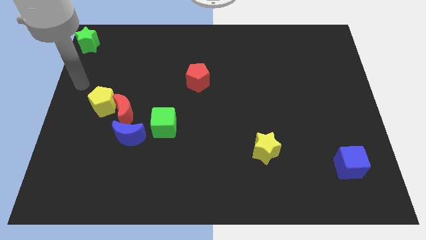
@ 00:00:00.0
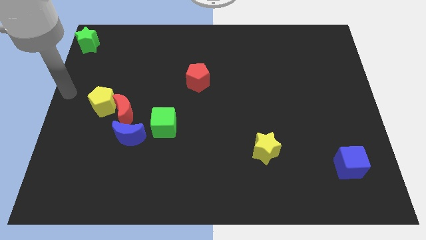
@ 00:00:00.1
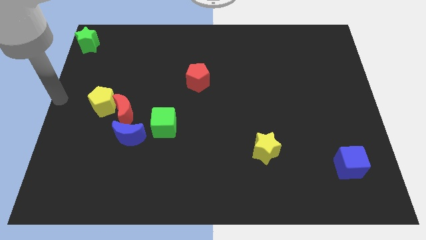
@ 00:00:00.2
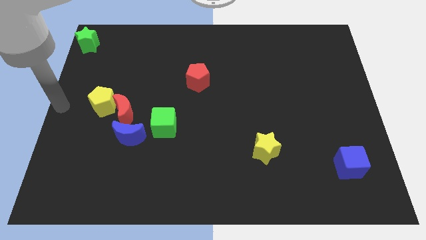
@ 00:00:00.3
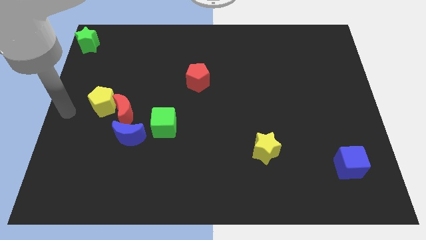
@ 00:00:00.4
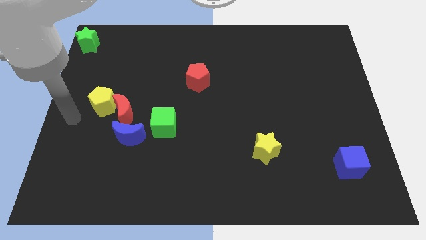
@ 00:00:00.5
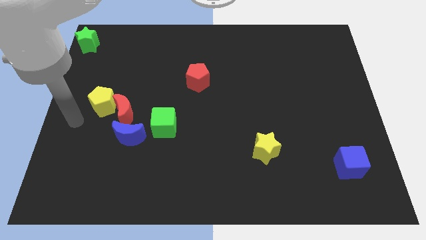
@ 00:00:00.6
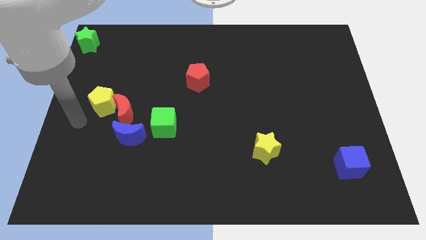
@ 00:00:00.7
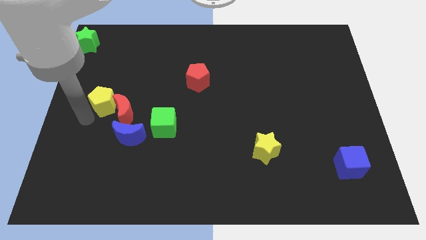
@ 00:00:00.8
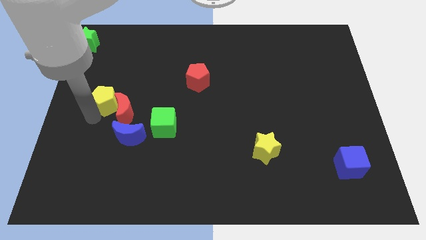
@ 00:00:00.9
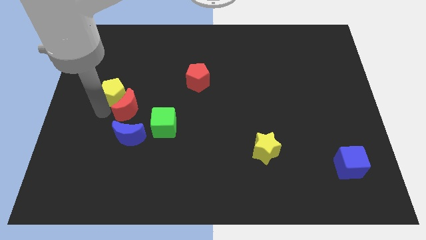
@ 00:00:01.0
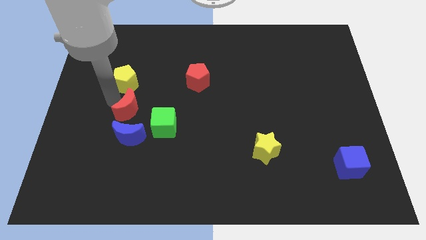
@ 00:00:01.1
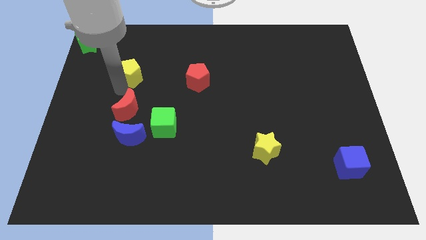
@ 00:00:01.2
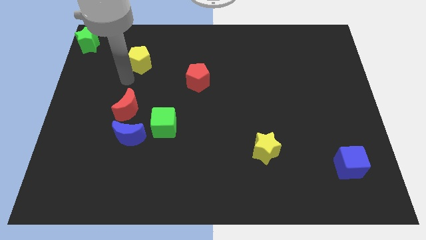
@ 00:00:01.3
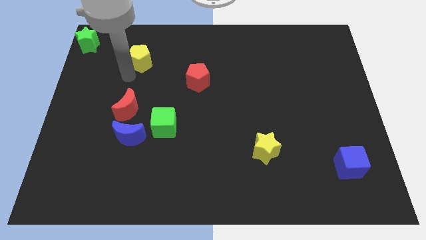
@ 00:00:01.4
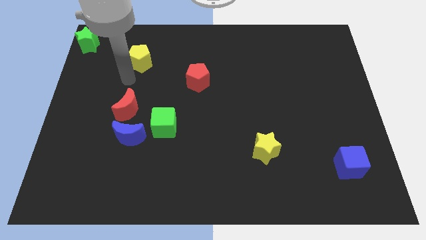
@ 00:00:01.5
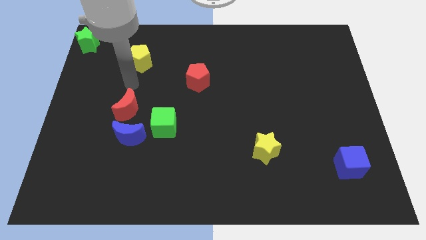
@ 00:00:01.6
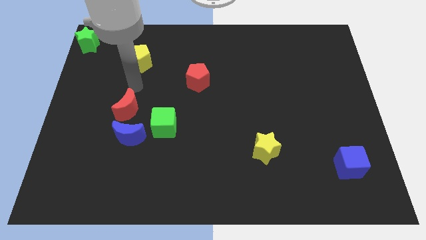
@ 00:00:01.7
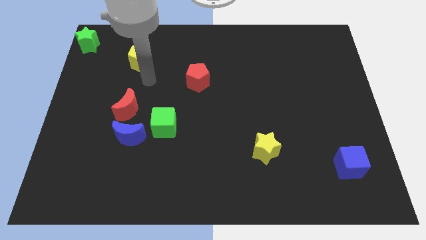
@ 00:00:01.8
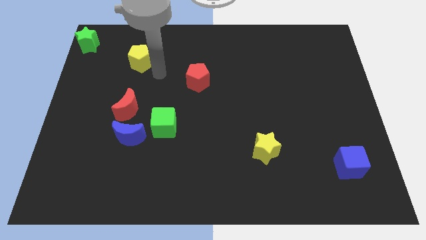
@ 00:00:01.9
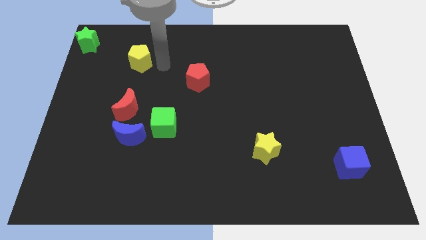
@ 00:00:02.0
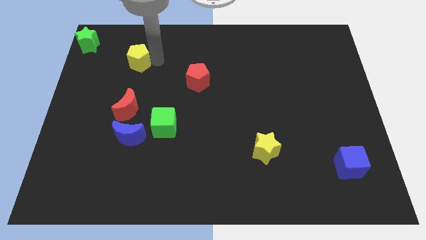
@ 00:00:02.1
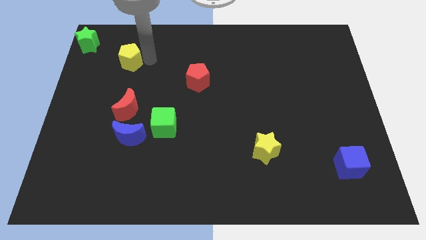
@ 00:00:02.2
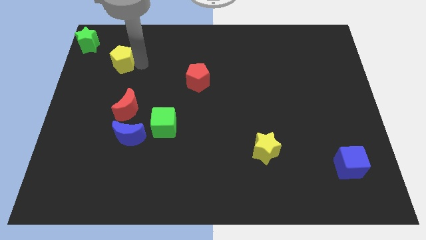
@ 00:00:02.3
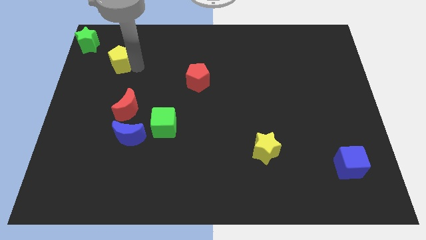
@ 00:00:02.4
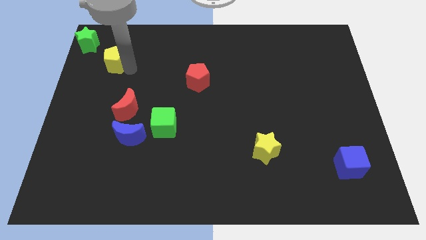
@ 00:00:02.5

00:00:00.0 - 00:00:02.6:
separate yellow pentagon from red crescent

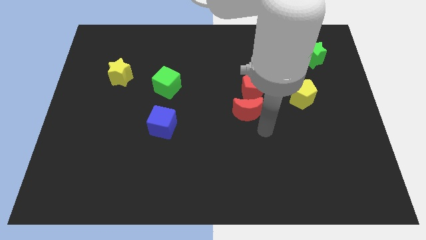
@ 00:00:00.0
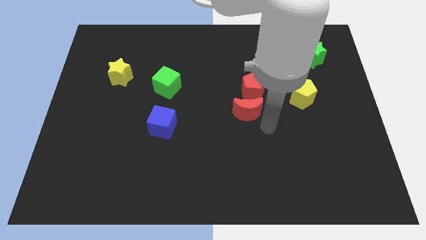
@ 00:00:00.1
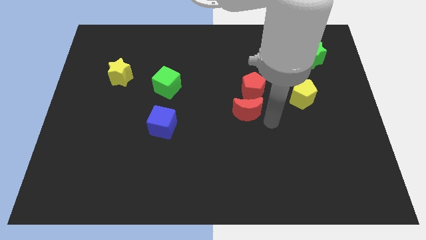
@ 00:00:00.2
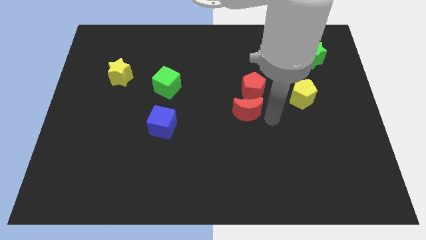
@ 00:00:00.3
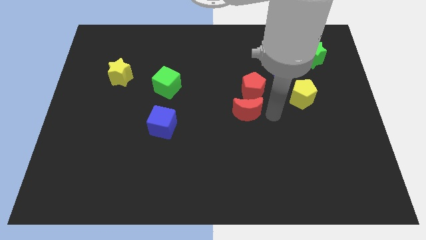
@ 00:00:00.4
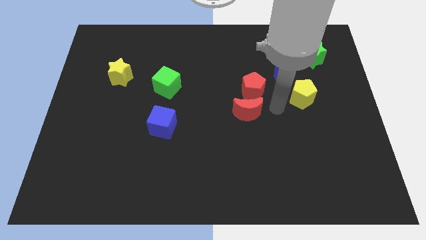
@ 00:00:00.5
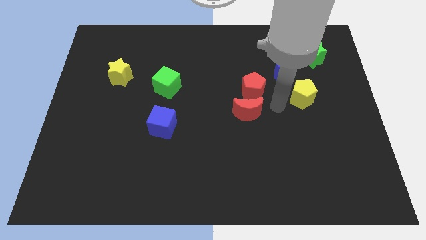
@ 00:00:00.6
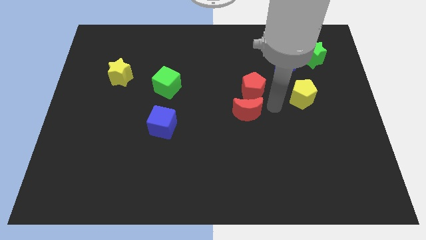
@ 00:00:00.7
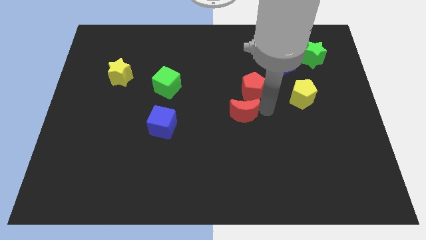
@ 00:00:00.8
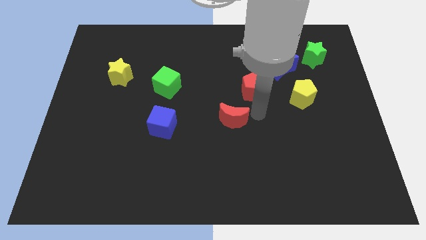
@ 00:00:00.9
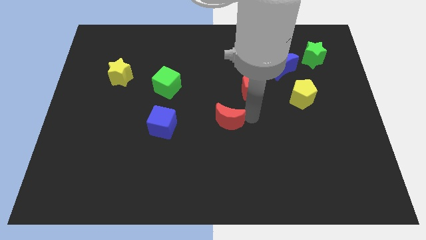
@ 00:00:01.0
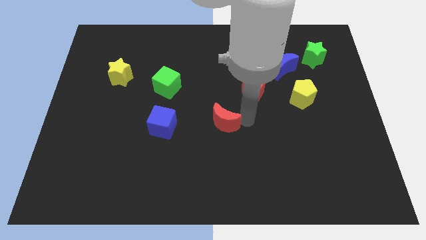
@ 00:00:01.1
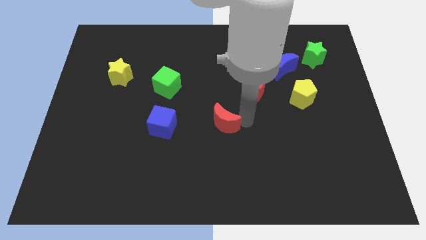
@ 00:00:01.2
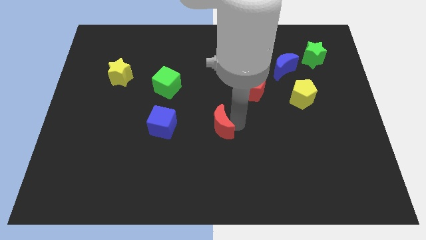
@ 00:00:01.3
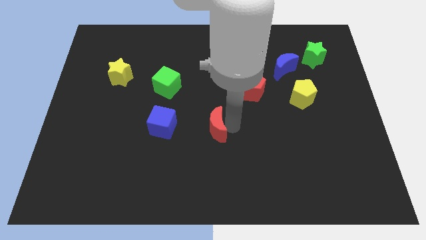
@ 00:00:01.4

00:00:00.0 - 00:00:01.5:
slightly push the red moon downwards

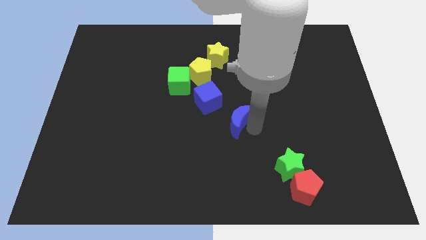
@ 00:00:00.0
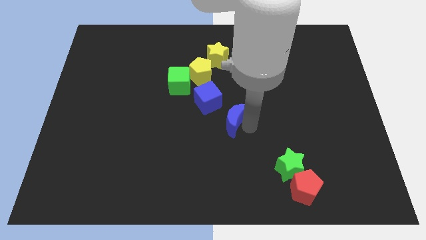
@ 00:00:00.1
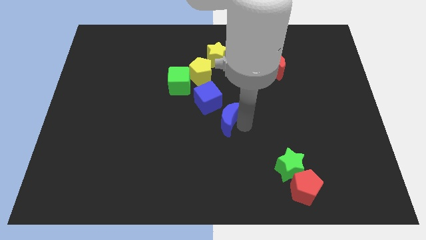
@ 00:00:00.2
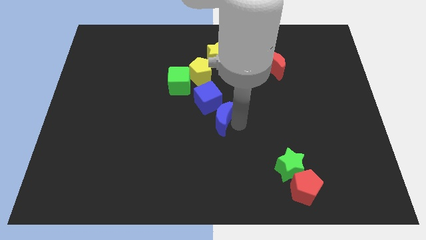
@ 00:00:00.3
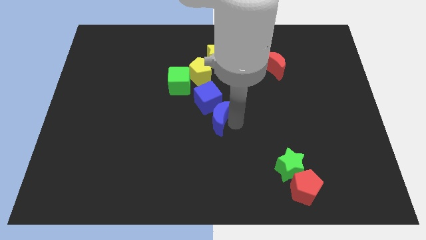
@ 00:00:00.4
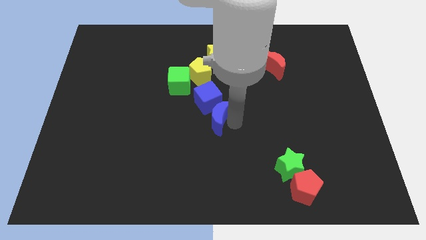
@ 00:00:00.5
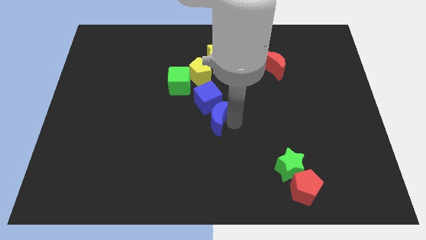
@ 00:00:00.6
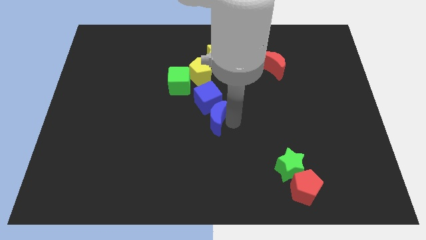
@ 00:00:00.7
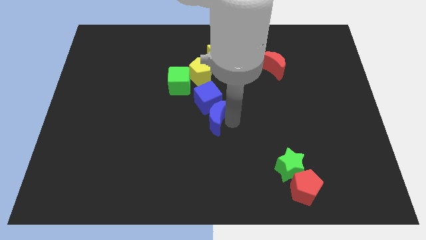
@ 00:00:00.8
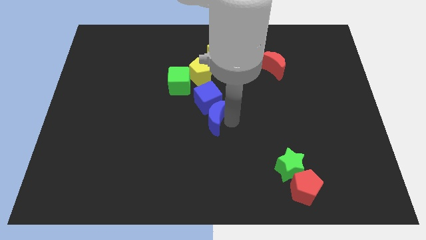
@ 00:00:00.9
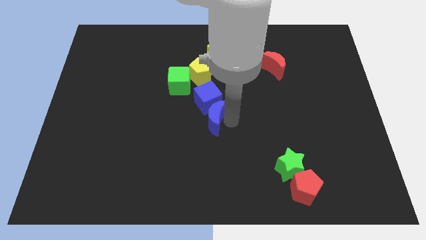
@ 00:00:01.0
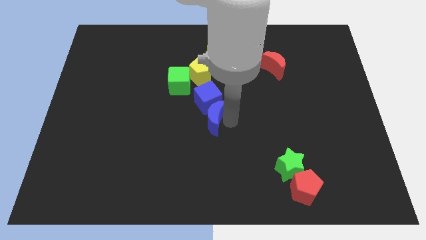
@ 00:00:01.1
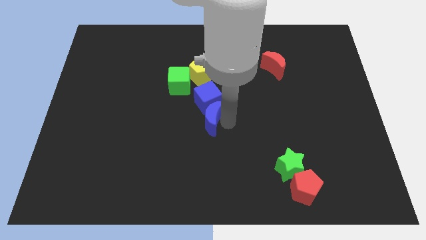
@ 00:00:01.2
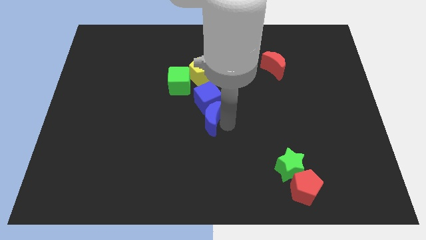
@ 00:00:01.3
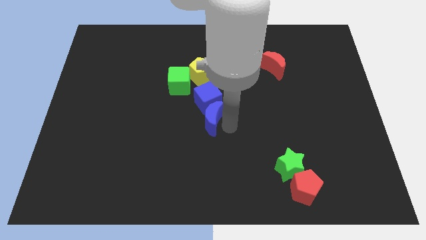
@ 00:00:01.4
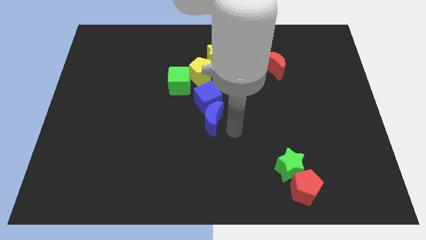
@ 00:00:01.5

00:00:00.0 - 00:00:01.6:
move the blue moon into the blue cube

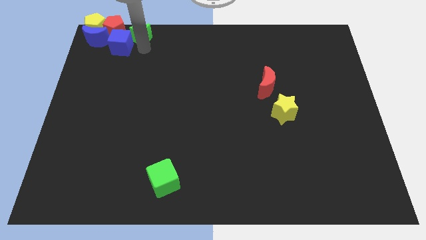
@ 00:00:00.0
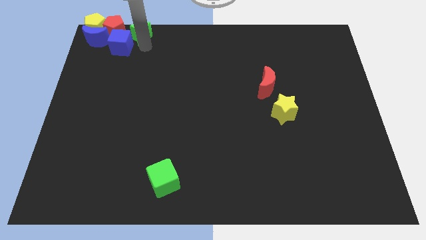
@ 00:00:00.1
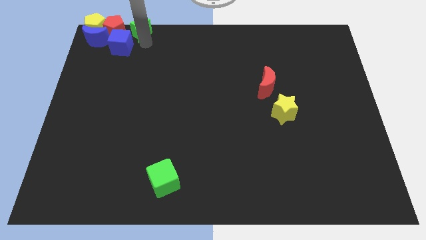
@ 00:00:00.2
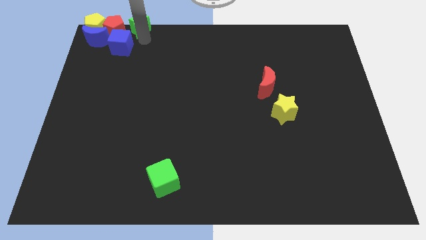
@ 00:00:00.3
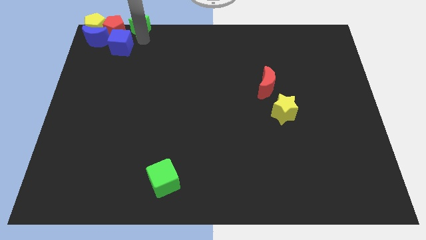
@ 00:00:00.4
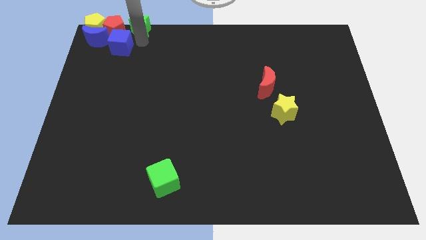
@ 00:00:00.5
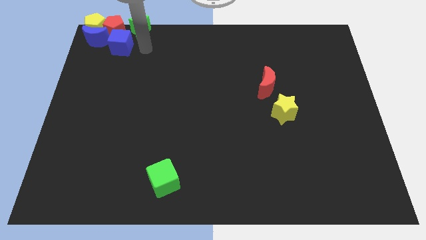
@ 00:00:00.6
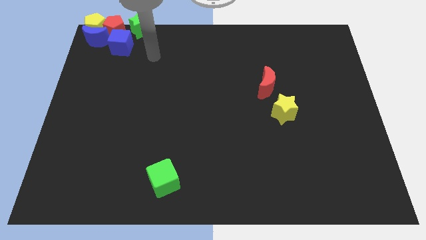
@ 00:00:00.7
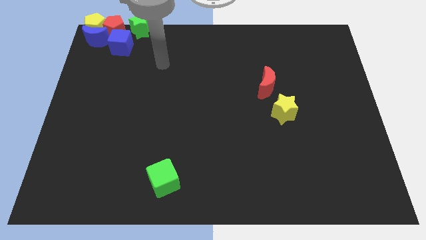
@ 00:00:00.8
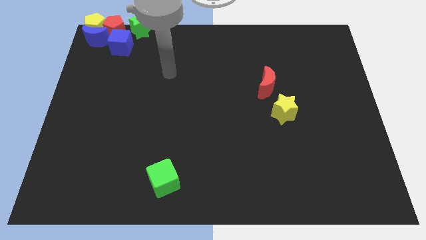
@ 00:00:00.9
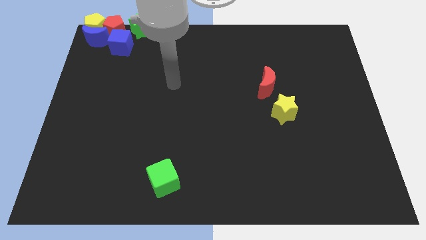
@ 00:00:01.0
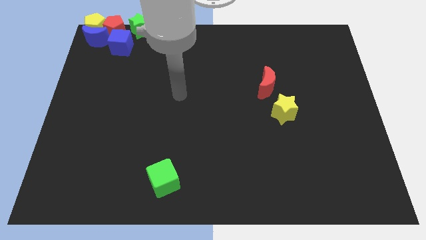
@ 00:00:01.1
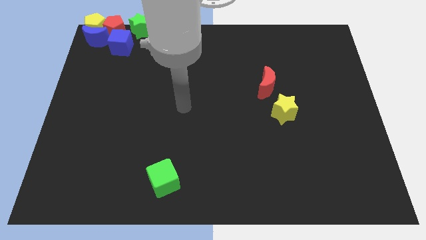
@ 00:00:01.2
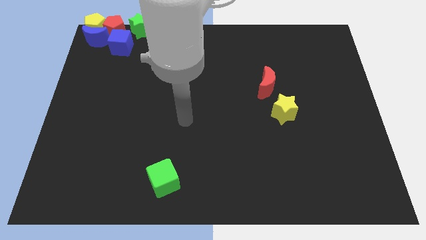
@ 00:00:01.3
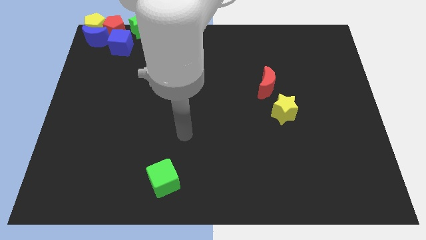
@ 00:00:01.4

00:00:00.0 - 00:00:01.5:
move the green star to the right of the red pentagon

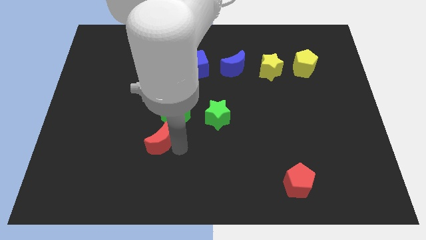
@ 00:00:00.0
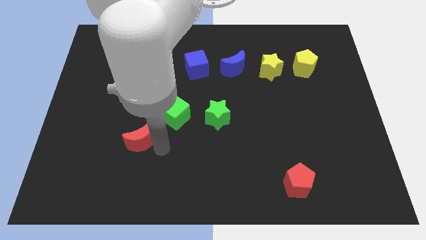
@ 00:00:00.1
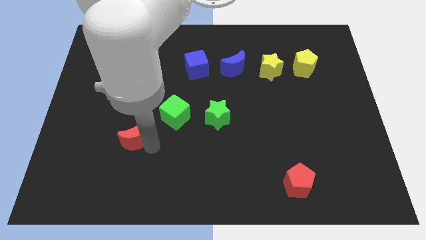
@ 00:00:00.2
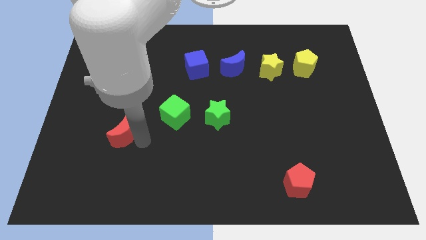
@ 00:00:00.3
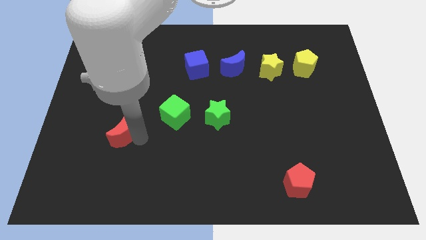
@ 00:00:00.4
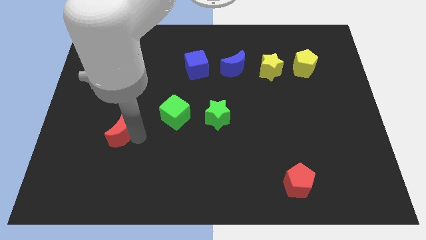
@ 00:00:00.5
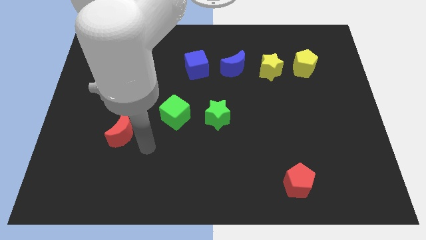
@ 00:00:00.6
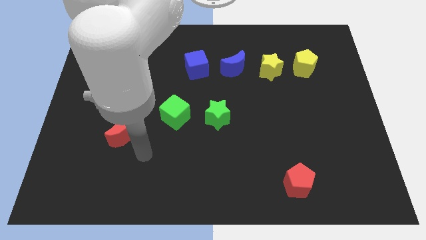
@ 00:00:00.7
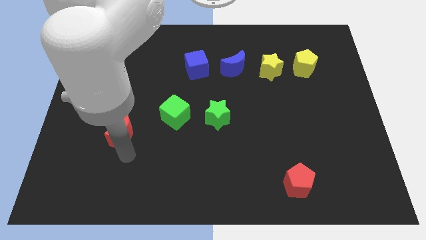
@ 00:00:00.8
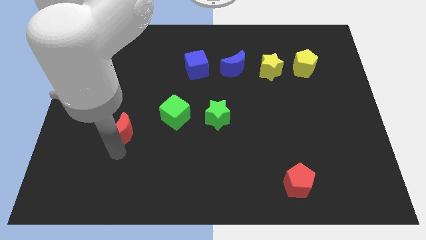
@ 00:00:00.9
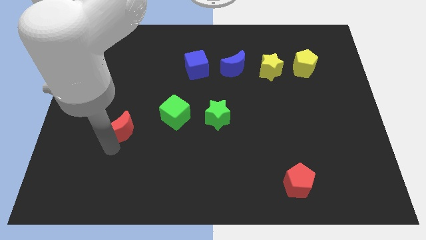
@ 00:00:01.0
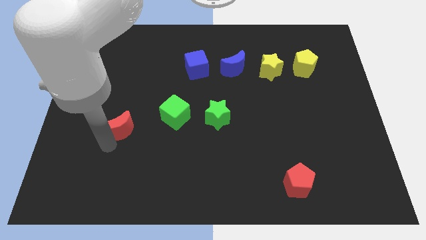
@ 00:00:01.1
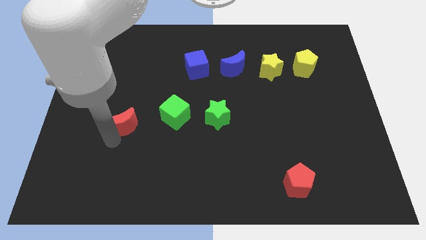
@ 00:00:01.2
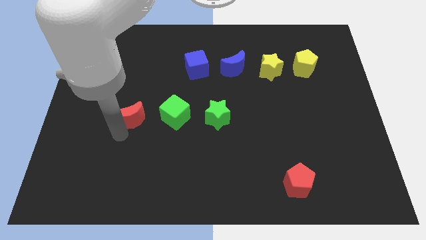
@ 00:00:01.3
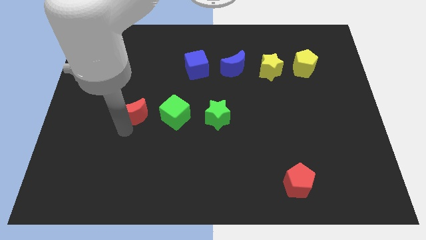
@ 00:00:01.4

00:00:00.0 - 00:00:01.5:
drag the red moon diagonally to the bottom left of the blue cube
